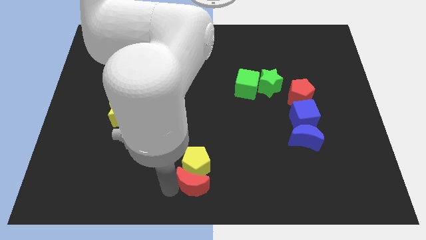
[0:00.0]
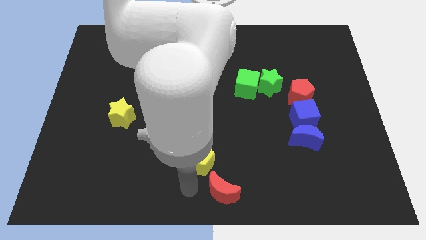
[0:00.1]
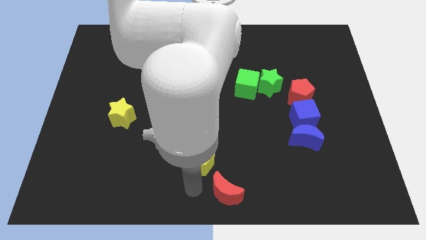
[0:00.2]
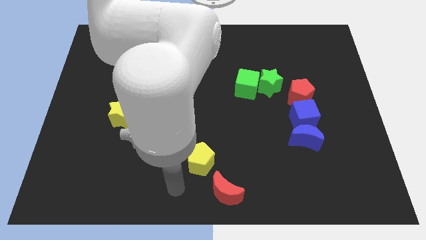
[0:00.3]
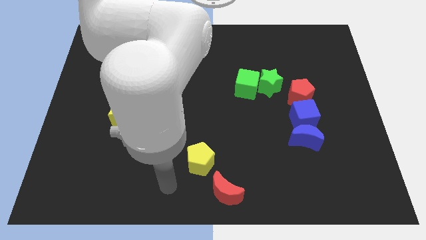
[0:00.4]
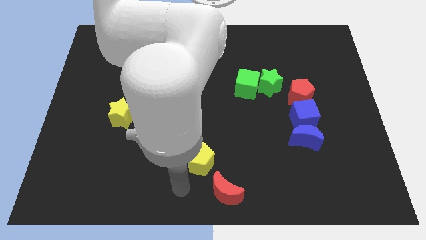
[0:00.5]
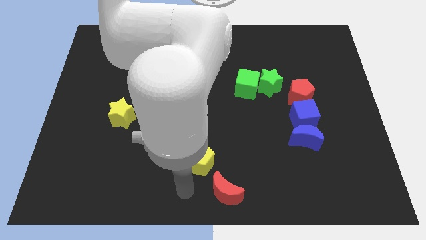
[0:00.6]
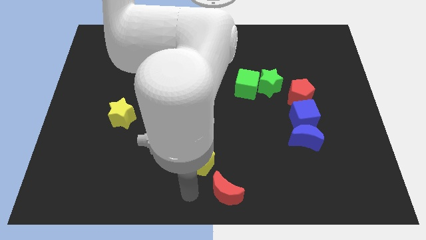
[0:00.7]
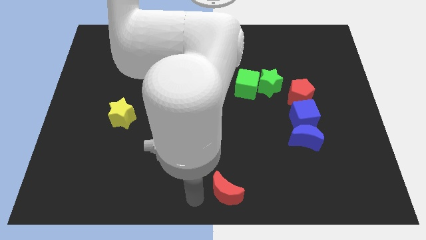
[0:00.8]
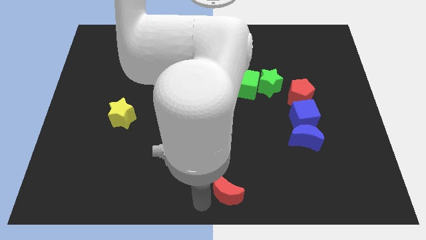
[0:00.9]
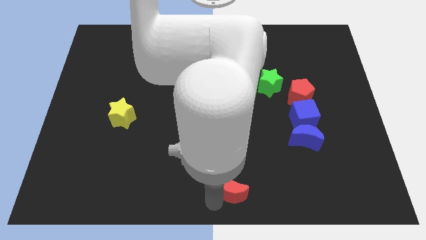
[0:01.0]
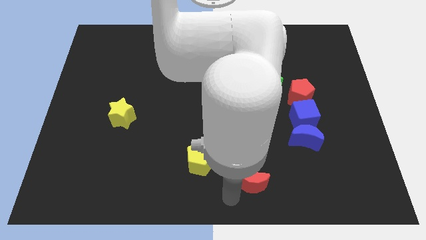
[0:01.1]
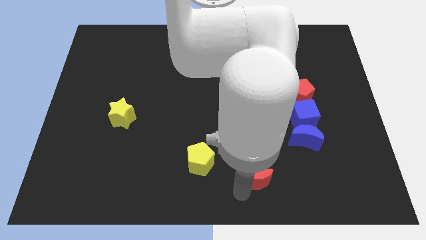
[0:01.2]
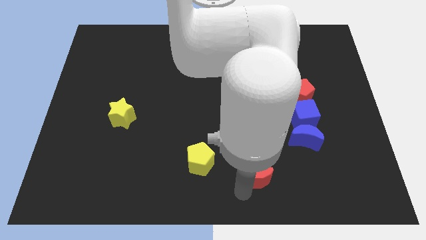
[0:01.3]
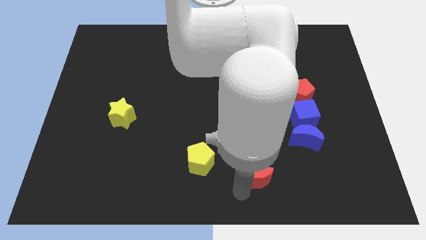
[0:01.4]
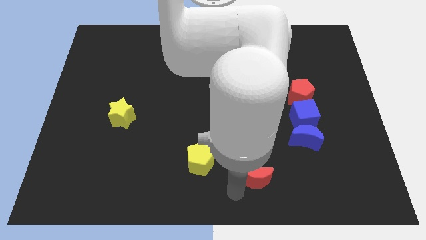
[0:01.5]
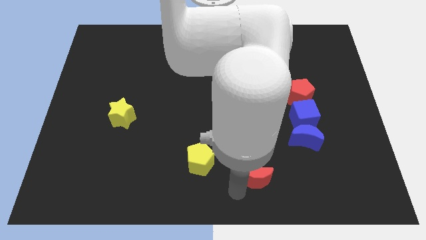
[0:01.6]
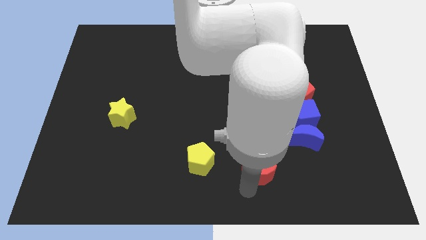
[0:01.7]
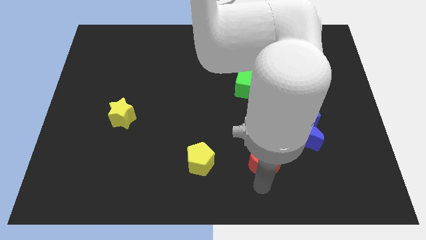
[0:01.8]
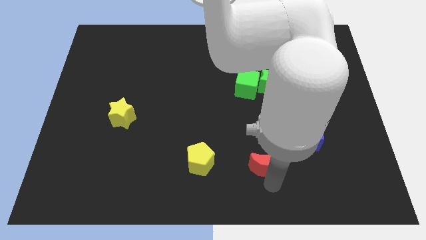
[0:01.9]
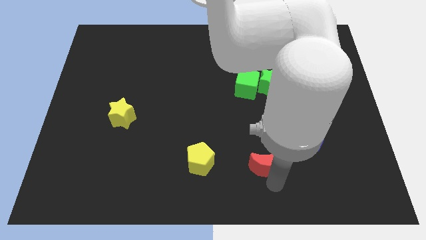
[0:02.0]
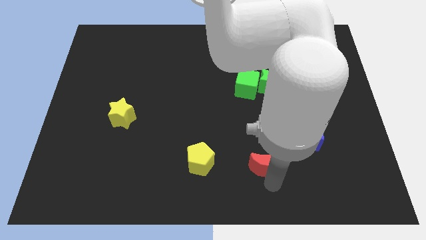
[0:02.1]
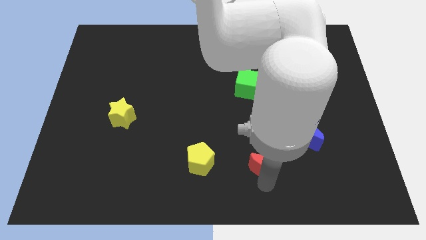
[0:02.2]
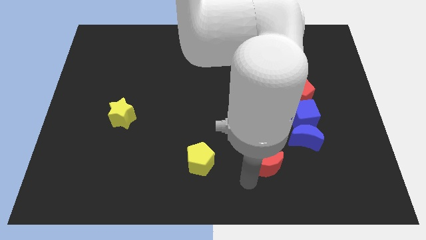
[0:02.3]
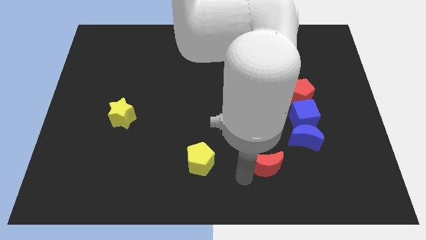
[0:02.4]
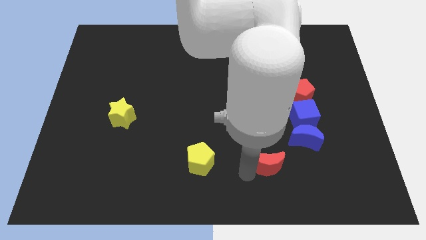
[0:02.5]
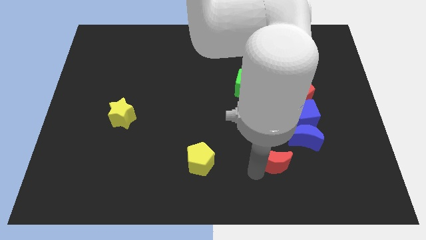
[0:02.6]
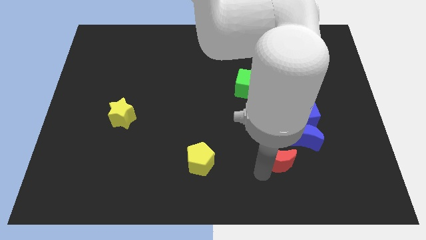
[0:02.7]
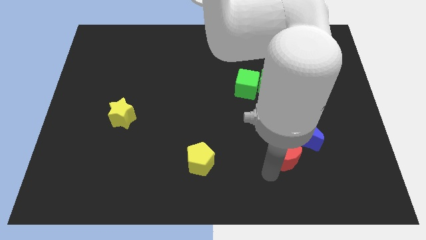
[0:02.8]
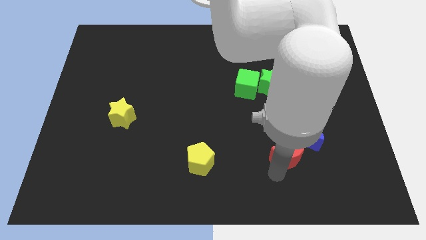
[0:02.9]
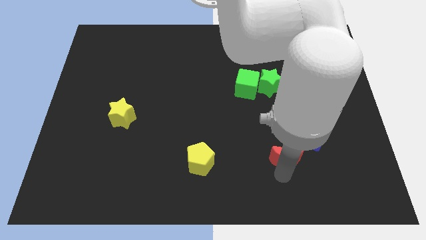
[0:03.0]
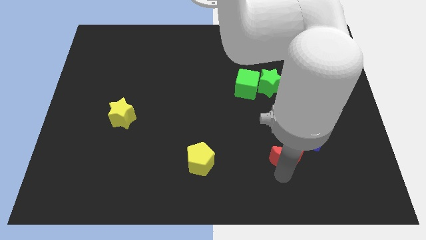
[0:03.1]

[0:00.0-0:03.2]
separate the yellow pentagon and red moon

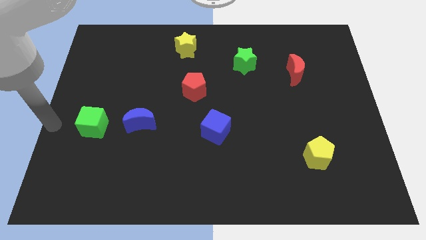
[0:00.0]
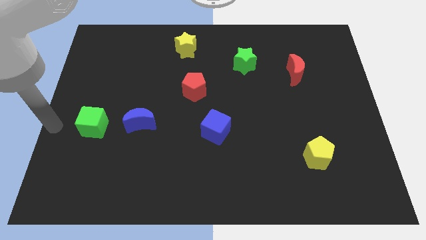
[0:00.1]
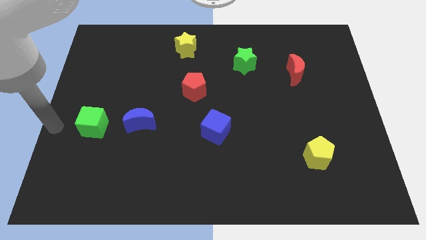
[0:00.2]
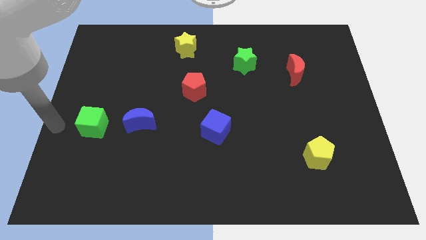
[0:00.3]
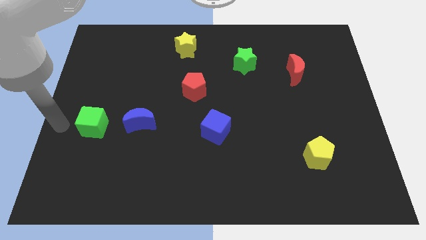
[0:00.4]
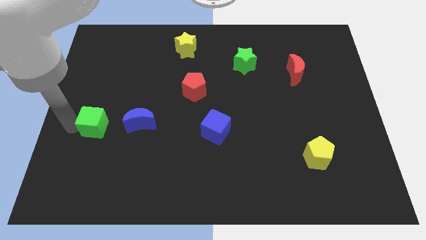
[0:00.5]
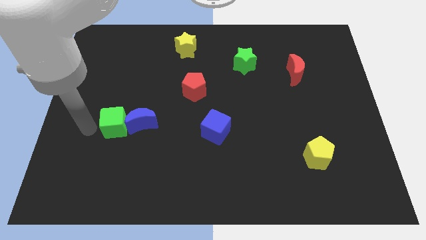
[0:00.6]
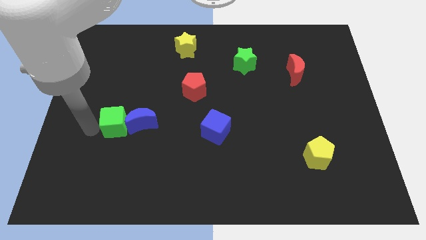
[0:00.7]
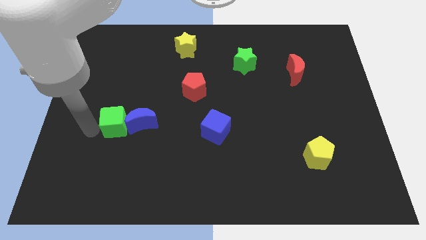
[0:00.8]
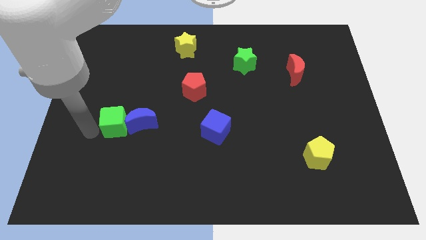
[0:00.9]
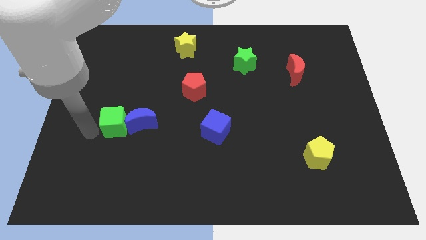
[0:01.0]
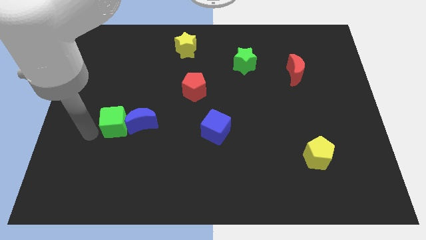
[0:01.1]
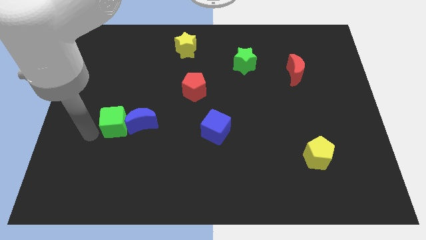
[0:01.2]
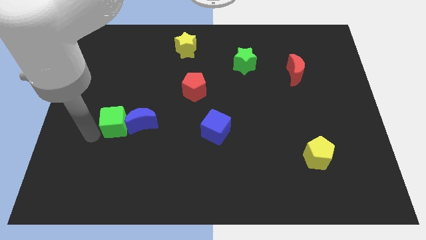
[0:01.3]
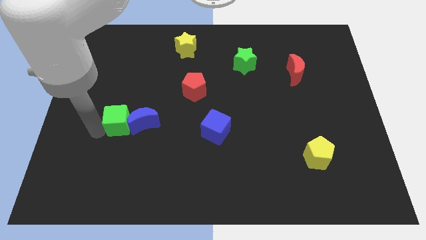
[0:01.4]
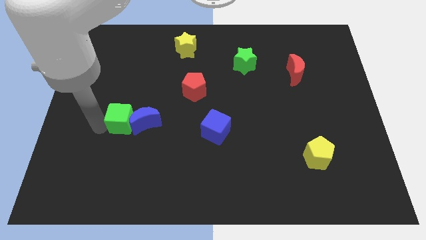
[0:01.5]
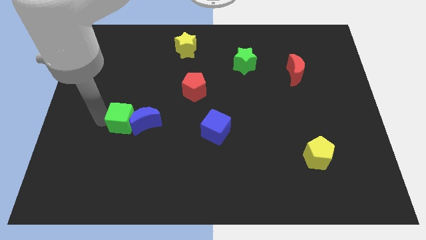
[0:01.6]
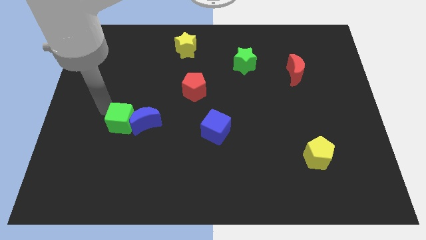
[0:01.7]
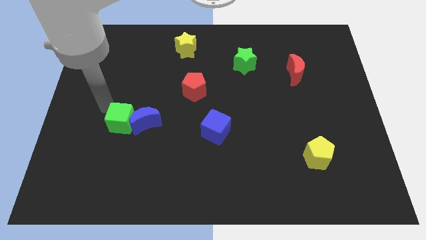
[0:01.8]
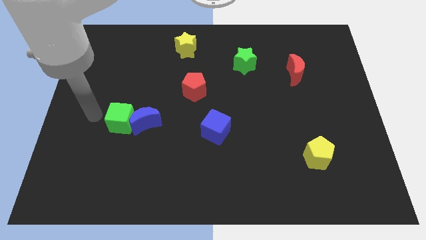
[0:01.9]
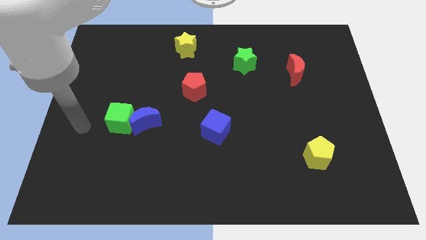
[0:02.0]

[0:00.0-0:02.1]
push green cube into blue moon

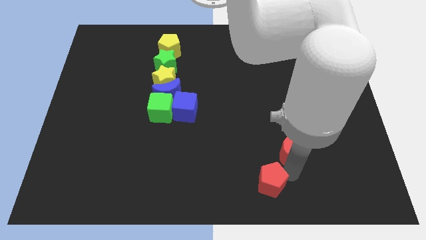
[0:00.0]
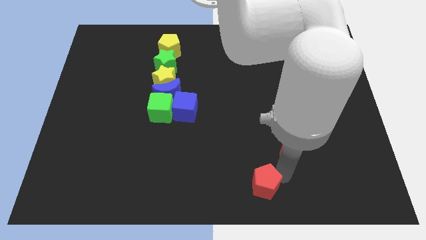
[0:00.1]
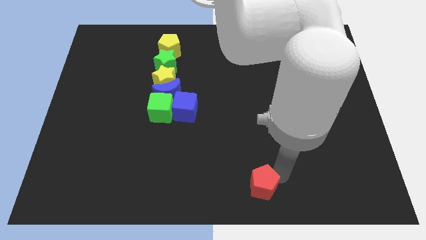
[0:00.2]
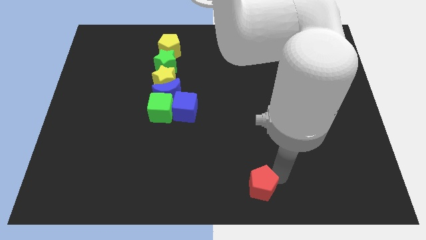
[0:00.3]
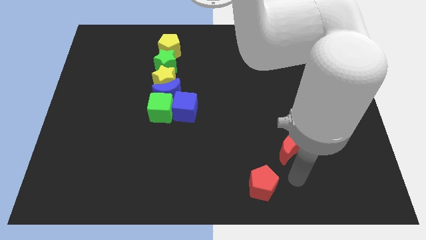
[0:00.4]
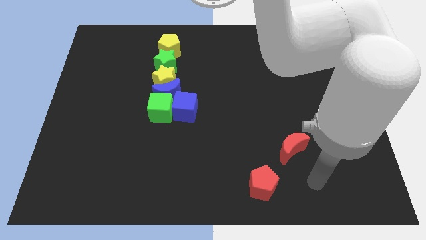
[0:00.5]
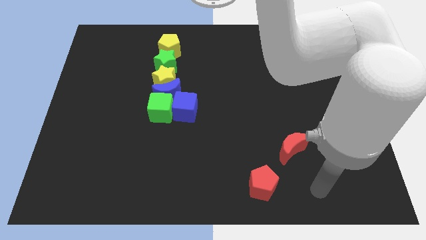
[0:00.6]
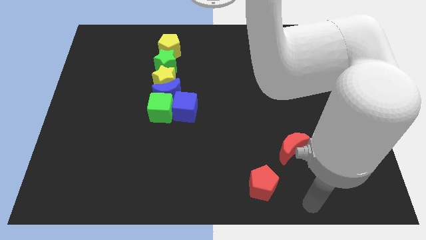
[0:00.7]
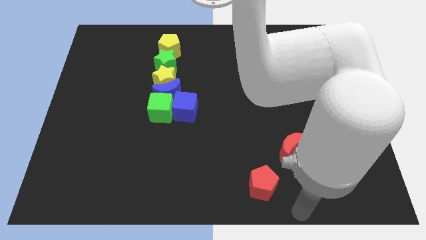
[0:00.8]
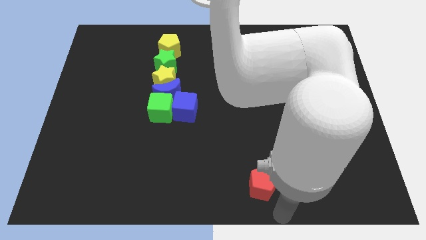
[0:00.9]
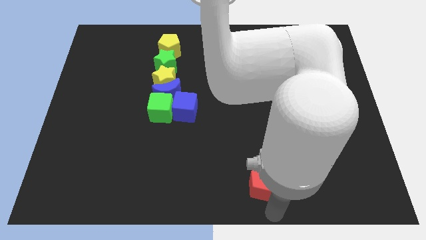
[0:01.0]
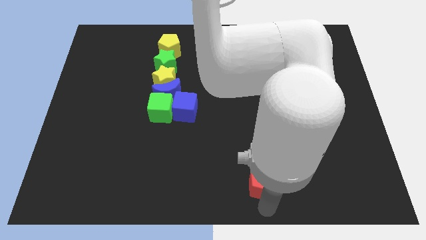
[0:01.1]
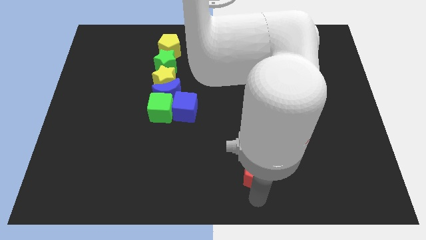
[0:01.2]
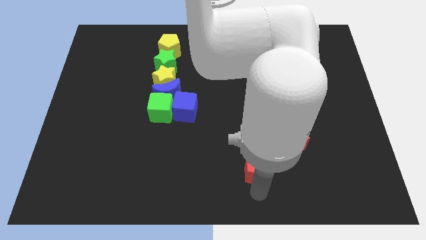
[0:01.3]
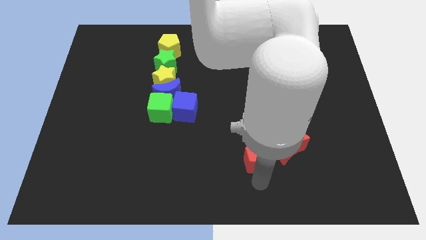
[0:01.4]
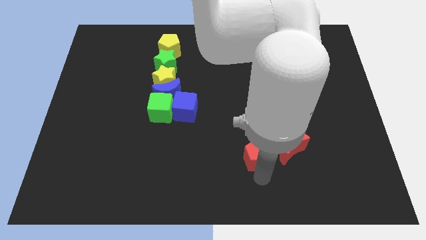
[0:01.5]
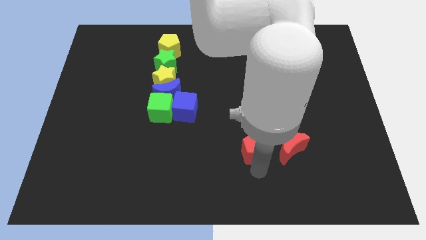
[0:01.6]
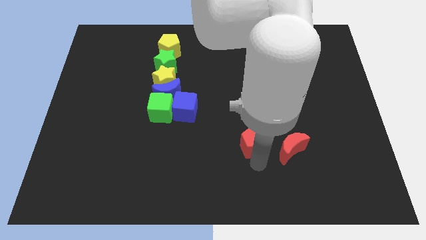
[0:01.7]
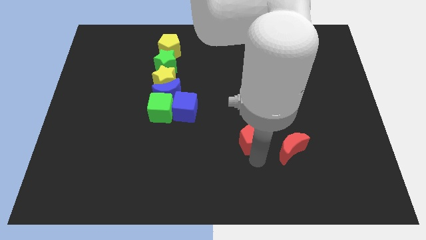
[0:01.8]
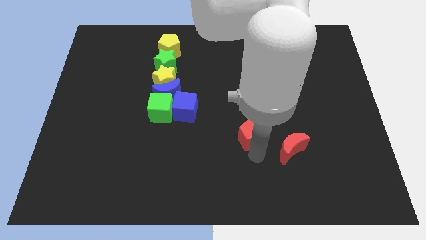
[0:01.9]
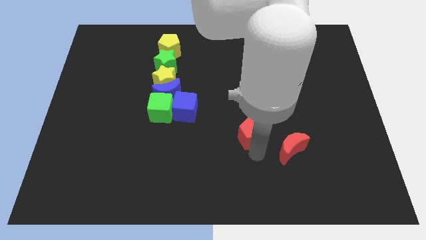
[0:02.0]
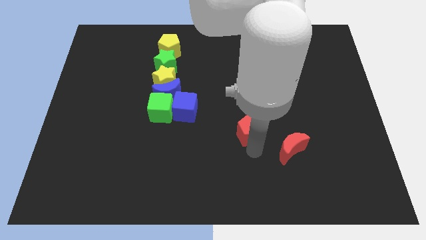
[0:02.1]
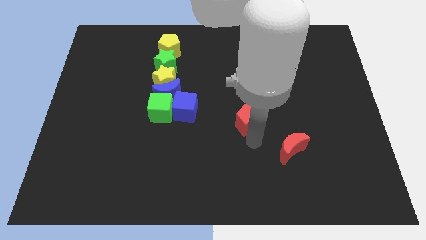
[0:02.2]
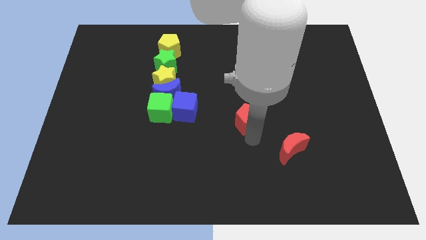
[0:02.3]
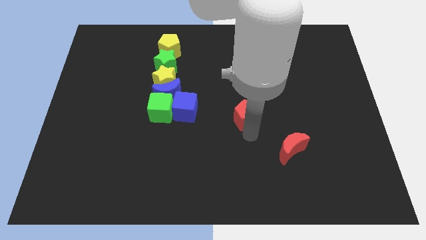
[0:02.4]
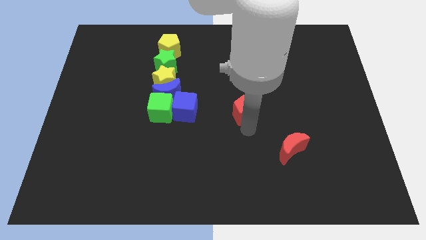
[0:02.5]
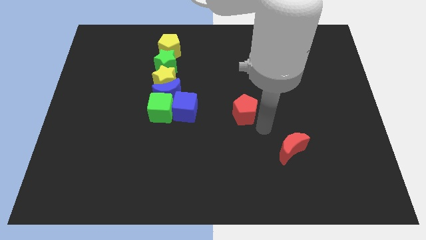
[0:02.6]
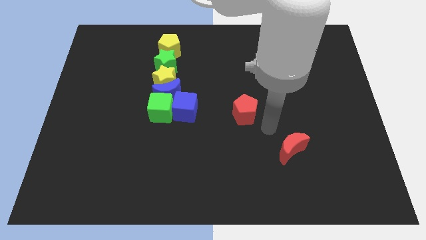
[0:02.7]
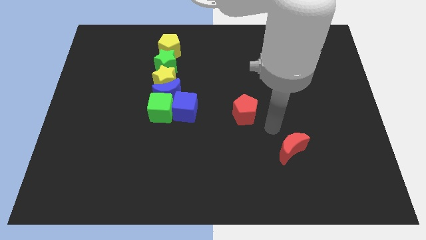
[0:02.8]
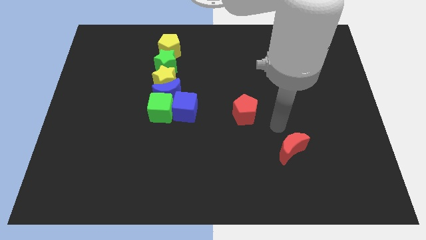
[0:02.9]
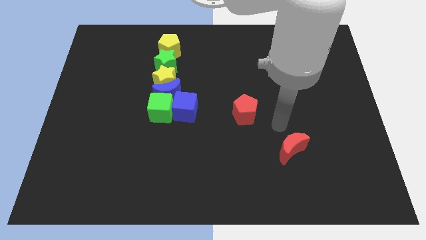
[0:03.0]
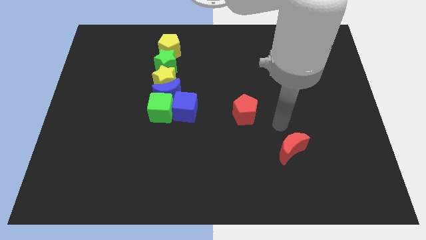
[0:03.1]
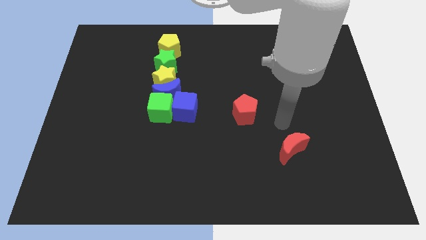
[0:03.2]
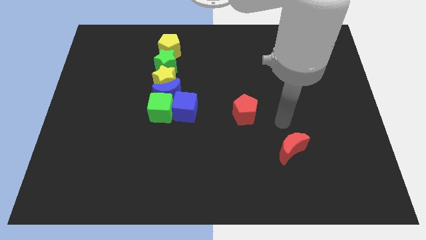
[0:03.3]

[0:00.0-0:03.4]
place the red pentagon diagonal to the right to the blue cube

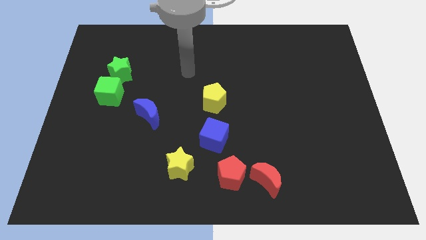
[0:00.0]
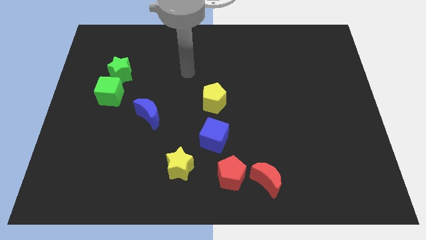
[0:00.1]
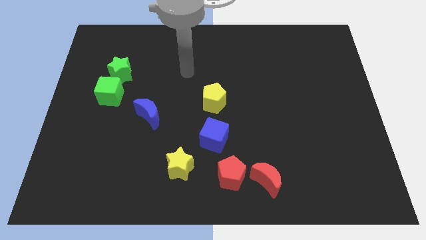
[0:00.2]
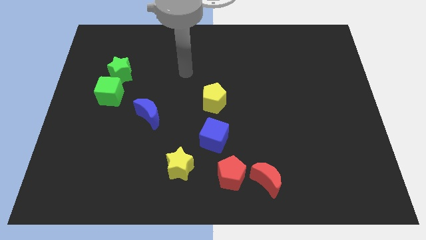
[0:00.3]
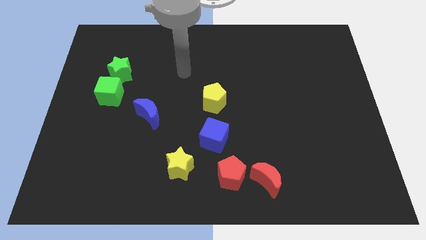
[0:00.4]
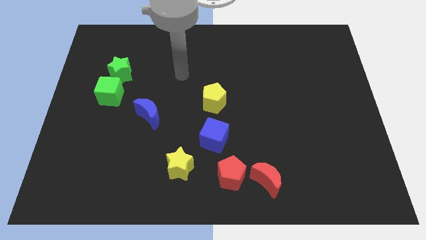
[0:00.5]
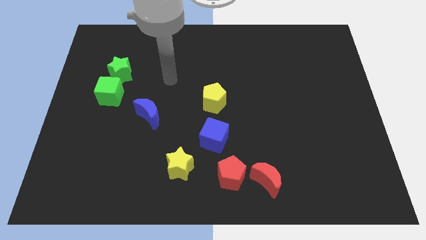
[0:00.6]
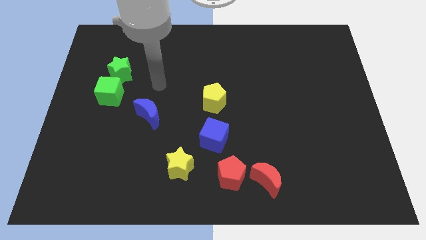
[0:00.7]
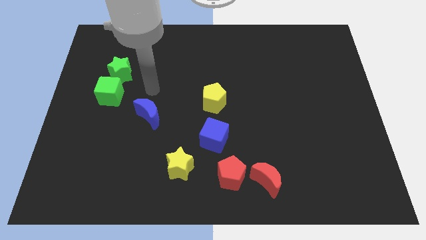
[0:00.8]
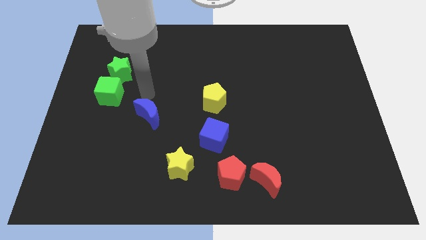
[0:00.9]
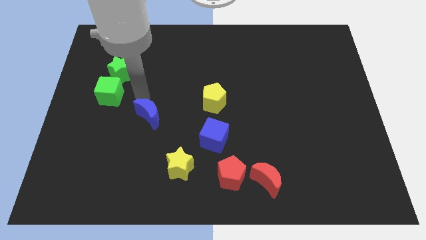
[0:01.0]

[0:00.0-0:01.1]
place your arm at the top of the blue crescent
